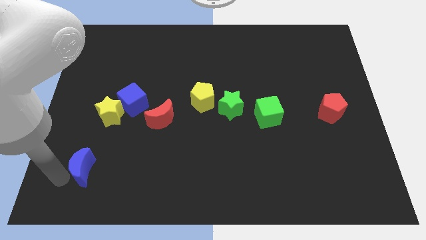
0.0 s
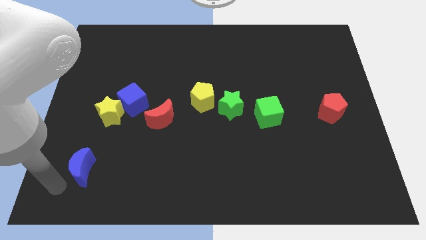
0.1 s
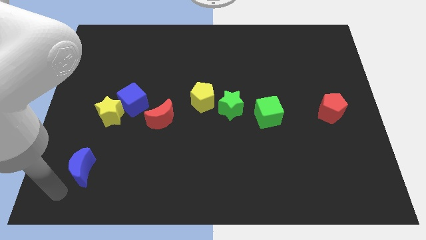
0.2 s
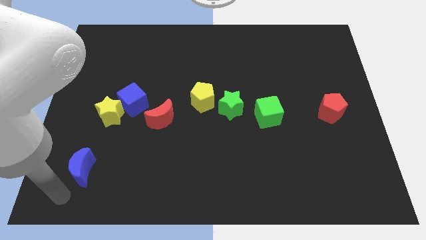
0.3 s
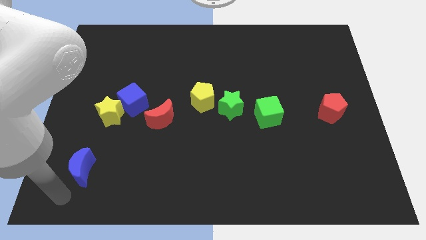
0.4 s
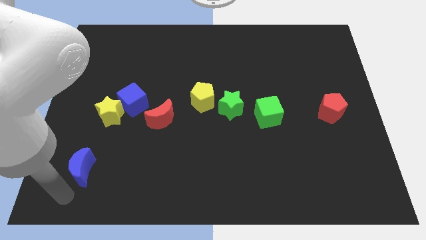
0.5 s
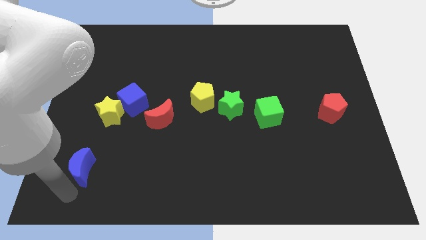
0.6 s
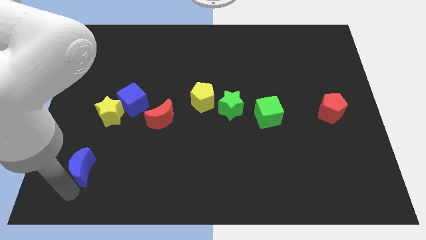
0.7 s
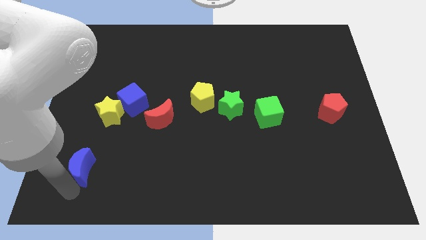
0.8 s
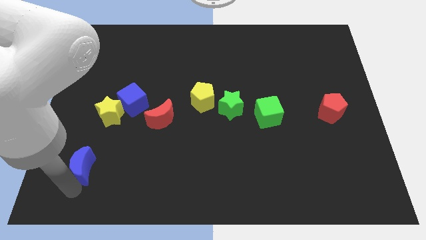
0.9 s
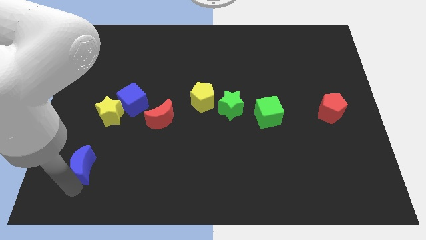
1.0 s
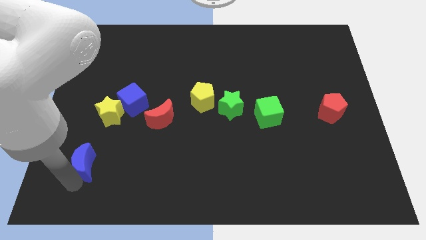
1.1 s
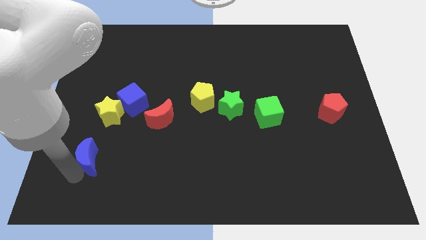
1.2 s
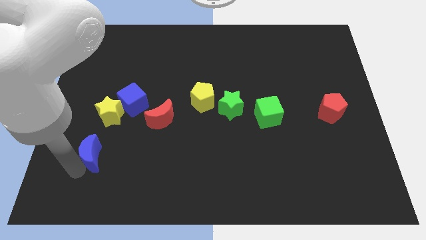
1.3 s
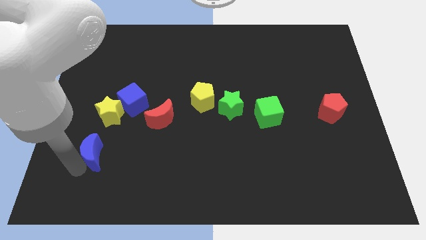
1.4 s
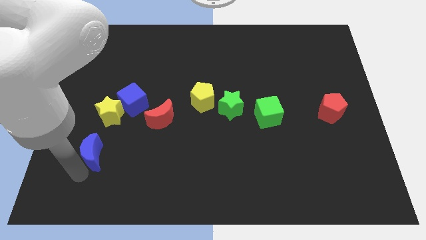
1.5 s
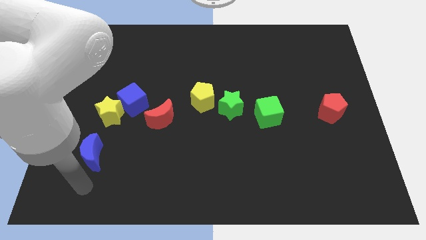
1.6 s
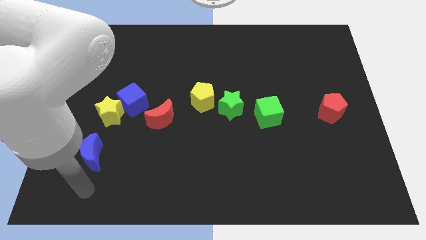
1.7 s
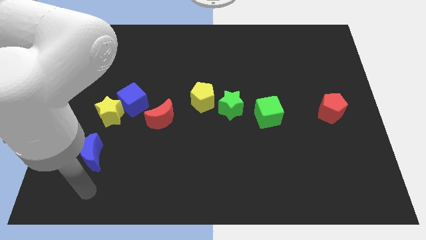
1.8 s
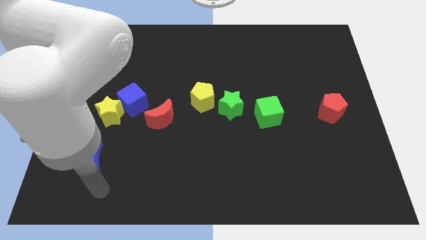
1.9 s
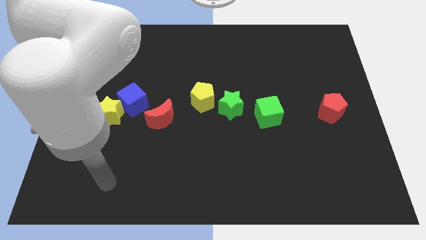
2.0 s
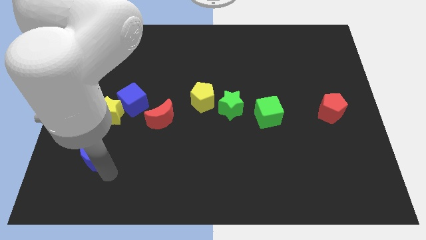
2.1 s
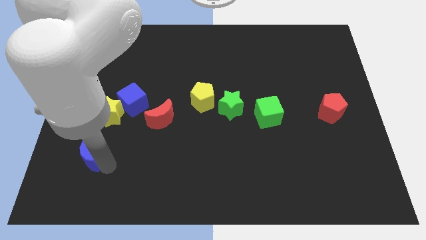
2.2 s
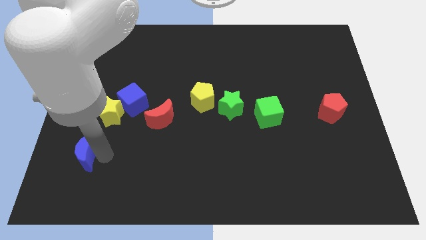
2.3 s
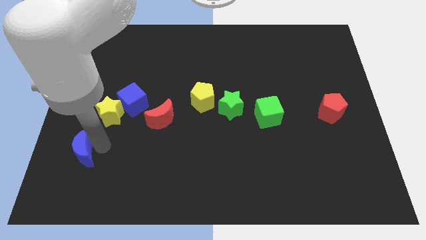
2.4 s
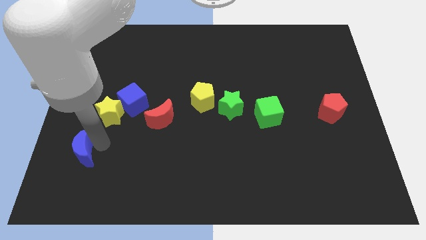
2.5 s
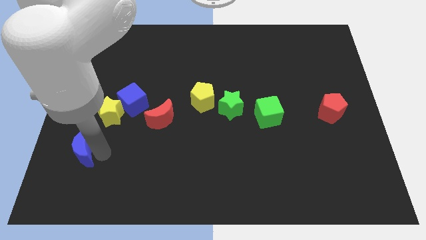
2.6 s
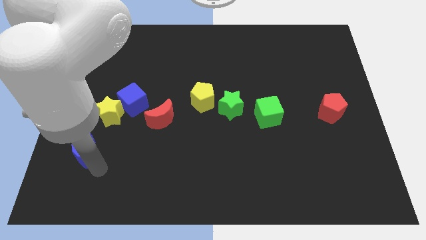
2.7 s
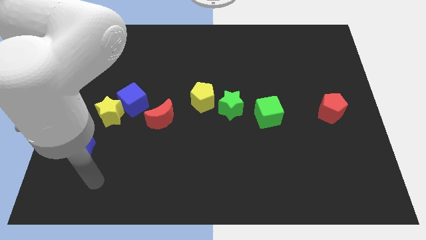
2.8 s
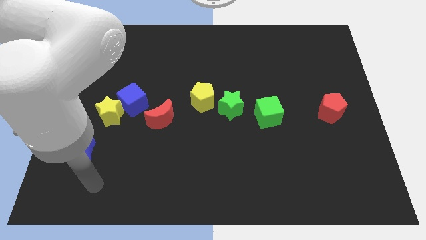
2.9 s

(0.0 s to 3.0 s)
slightly push the blue moon to the top of the board

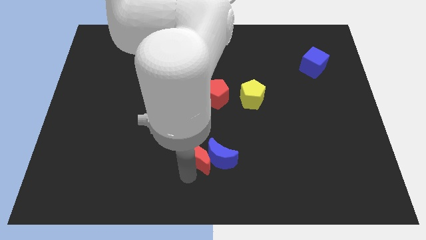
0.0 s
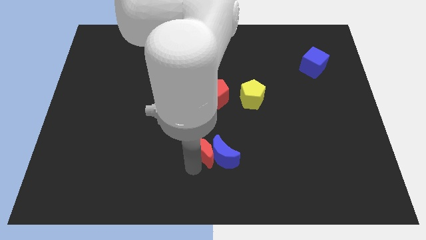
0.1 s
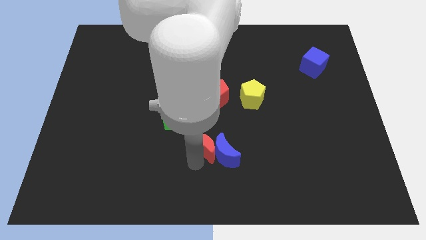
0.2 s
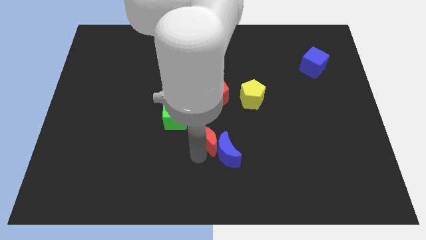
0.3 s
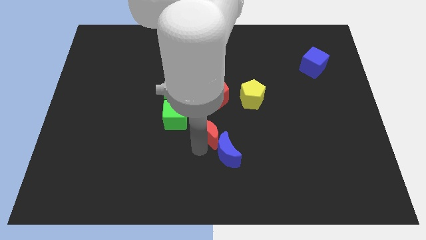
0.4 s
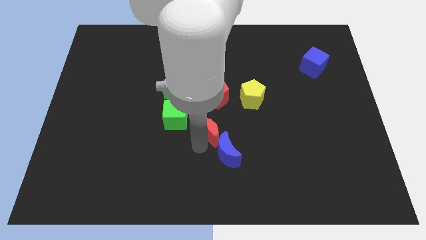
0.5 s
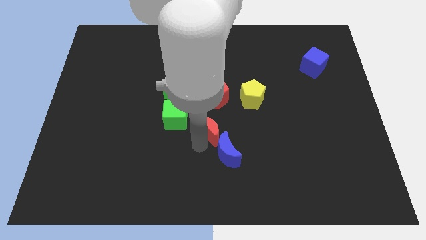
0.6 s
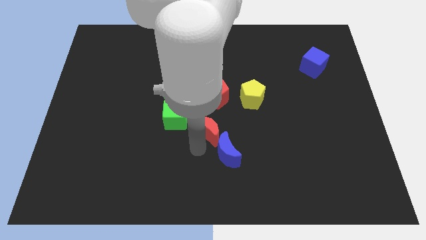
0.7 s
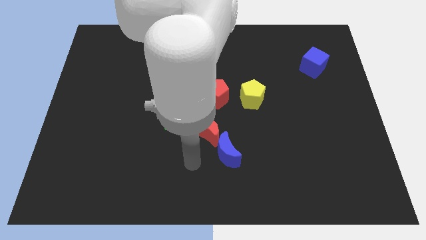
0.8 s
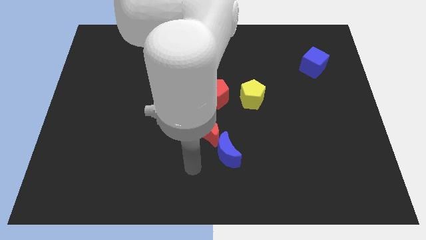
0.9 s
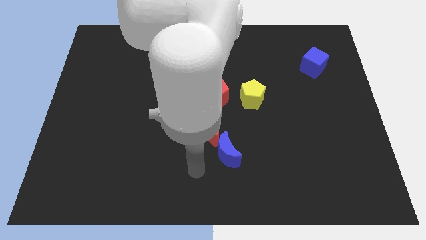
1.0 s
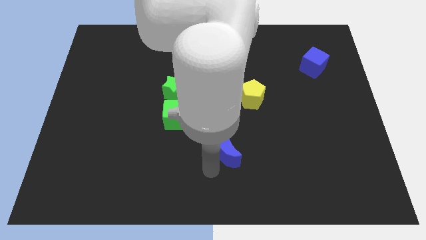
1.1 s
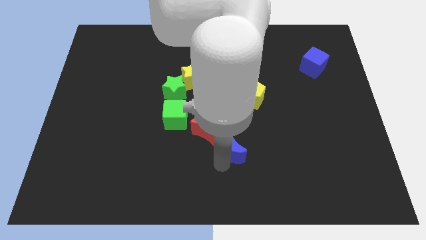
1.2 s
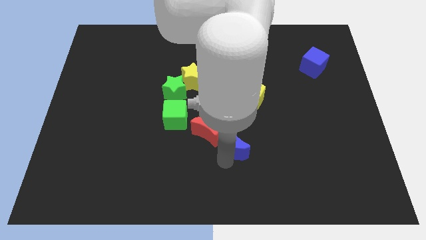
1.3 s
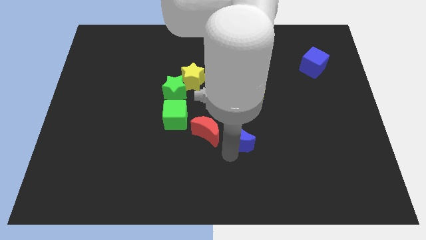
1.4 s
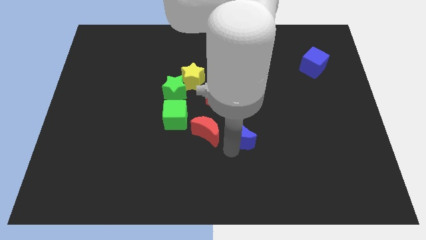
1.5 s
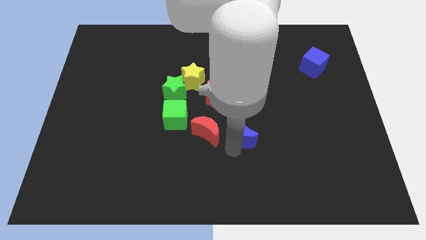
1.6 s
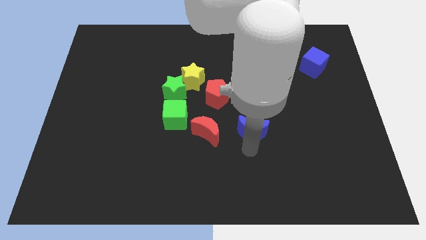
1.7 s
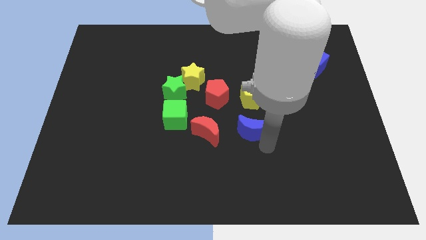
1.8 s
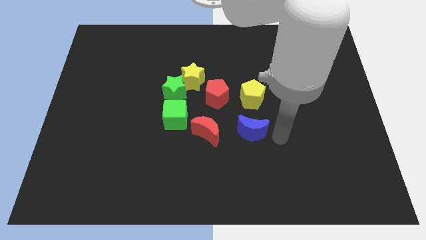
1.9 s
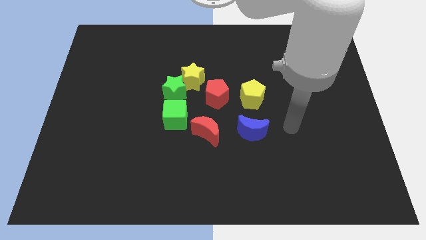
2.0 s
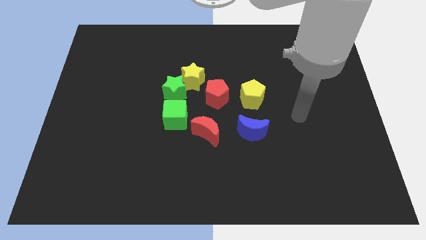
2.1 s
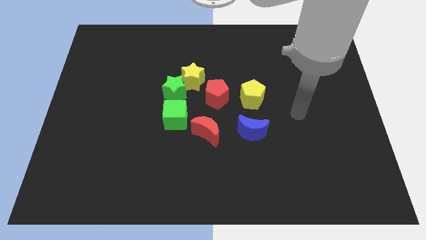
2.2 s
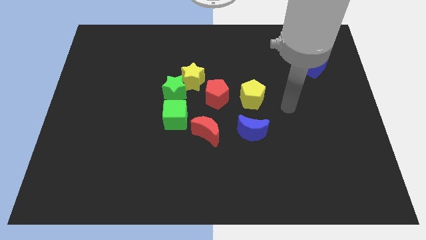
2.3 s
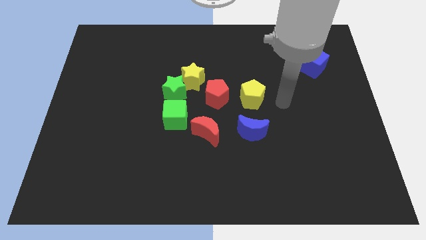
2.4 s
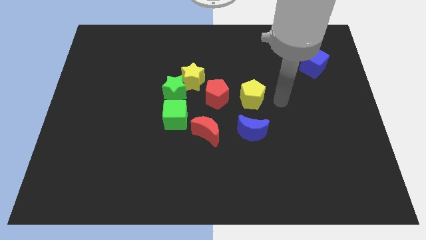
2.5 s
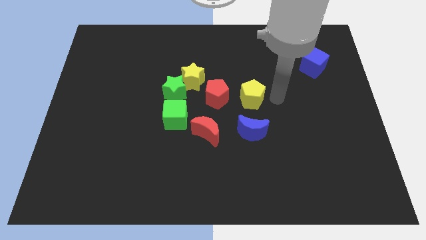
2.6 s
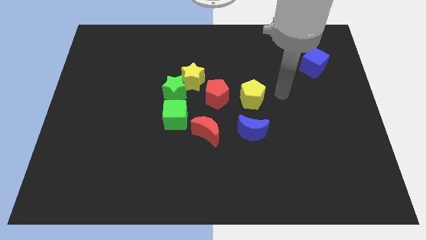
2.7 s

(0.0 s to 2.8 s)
place the blue moon below the yellow pentagon

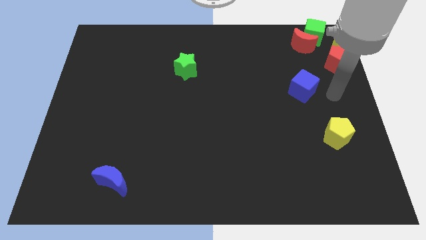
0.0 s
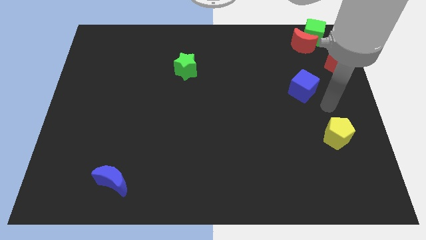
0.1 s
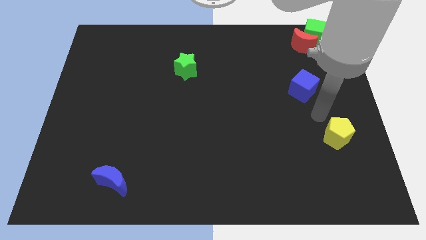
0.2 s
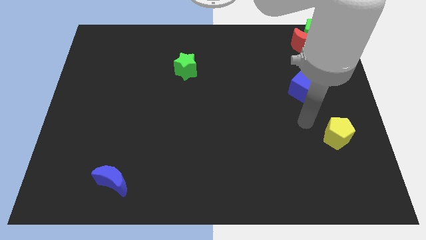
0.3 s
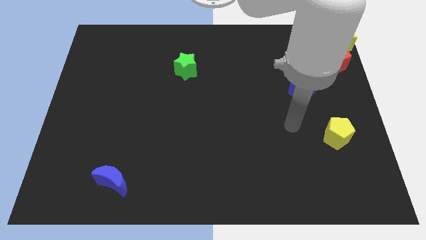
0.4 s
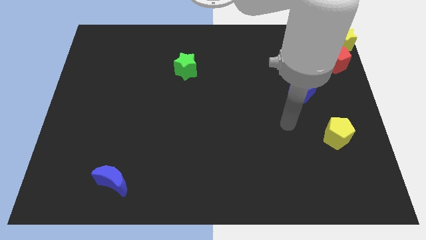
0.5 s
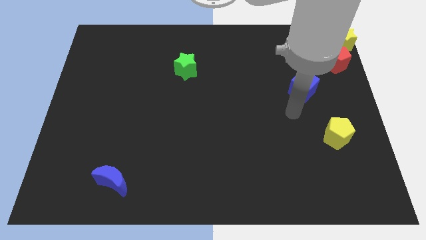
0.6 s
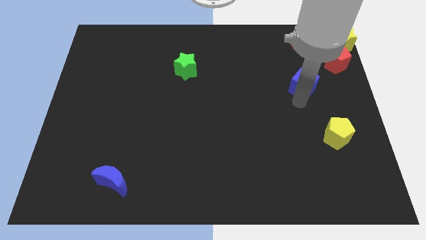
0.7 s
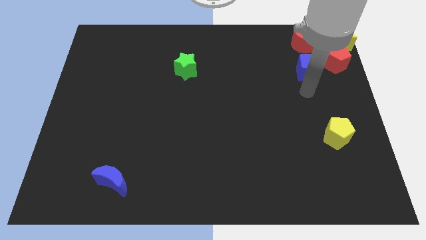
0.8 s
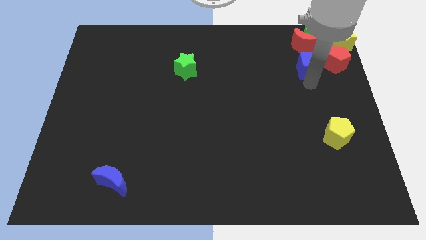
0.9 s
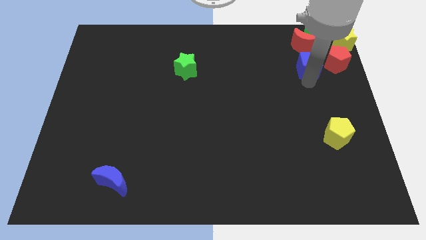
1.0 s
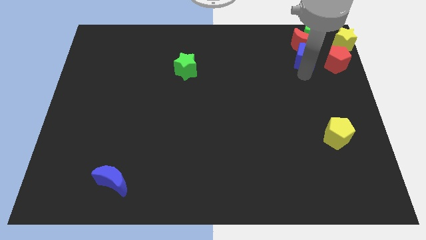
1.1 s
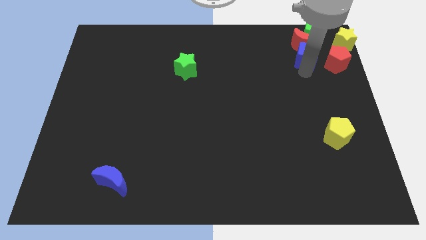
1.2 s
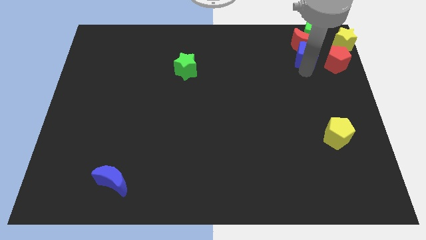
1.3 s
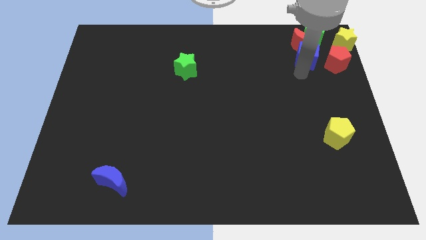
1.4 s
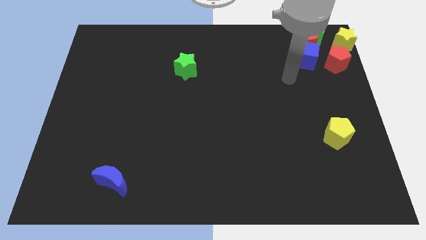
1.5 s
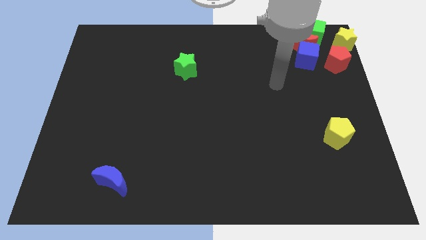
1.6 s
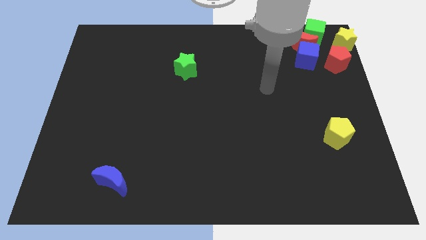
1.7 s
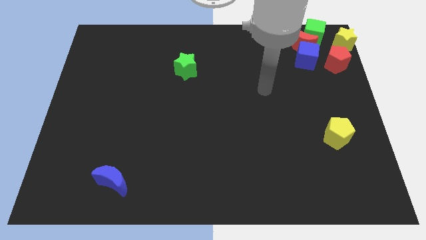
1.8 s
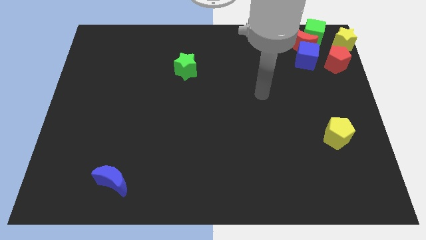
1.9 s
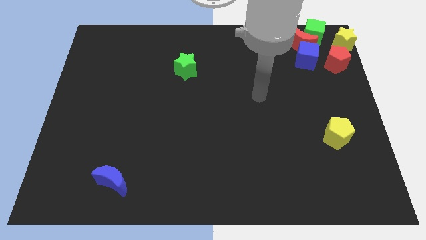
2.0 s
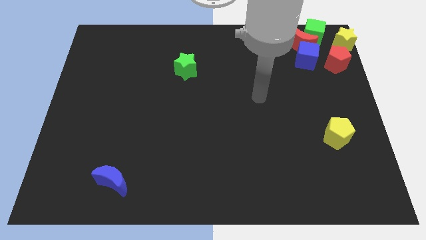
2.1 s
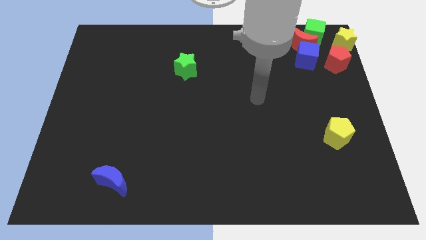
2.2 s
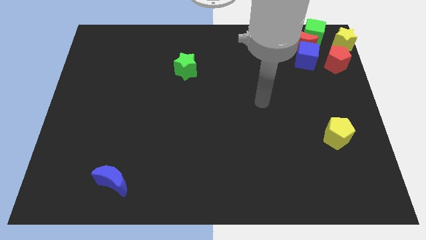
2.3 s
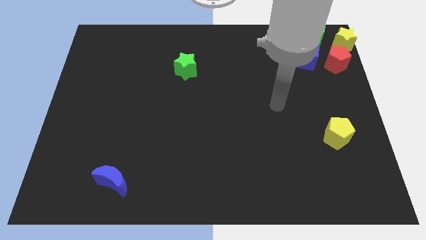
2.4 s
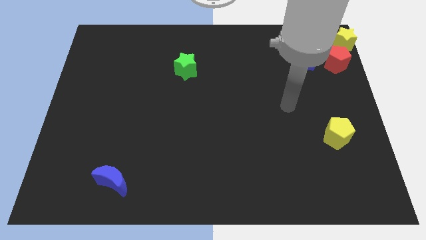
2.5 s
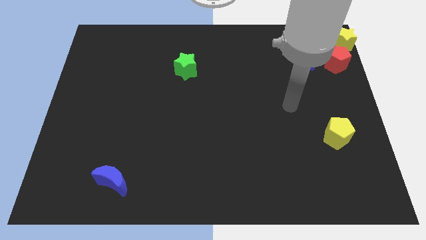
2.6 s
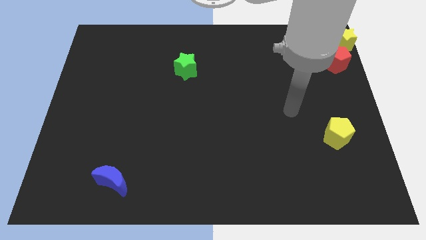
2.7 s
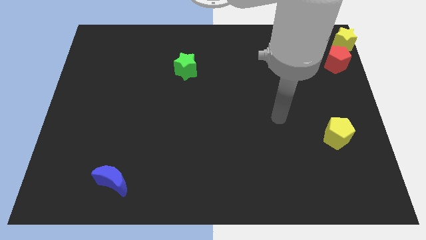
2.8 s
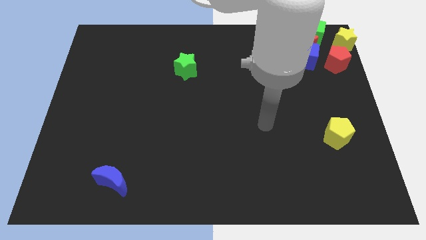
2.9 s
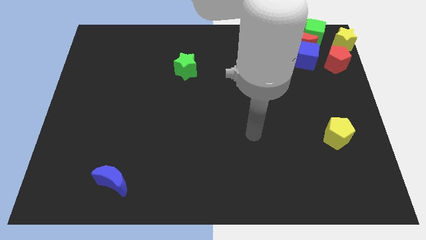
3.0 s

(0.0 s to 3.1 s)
place the blue cube below the red moon

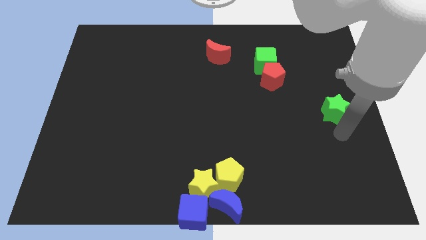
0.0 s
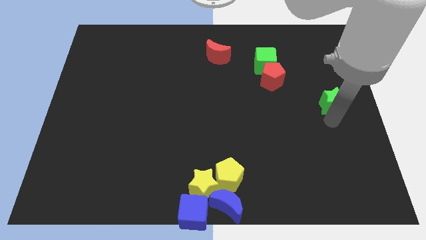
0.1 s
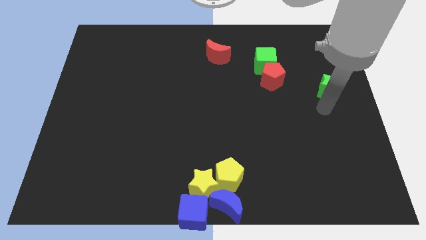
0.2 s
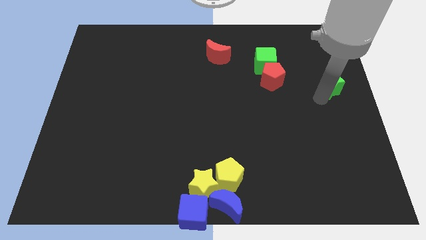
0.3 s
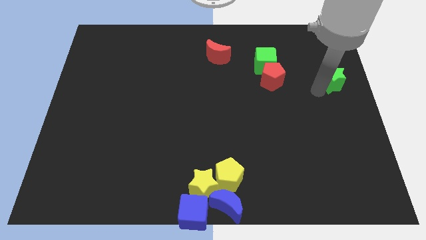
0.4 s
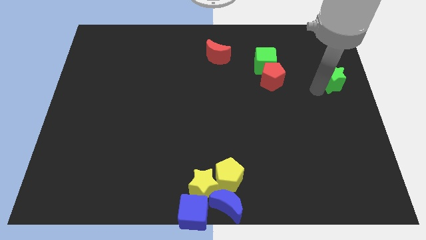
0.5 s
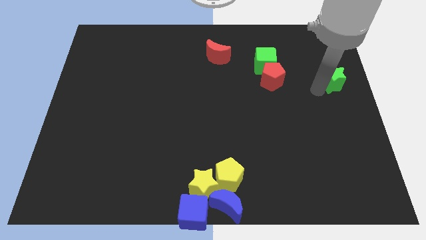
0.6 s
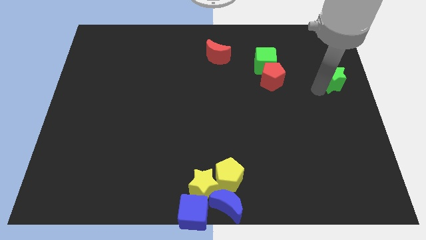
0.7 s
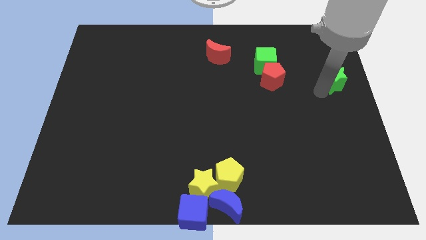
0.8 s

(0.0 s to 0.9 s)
place the green star right to the red pentagon
